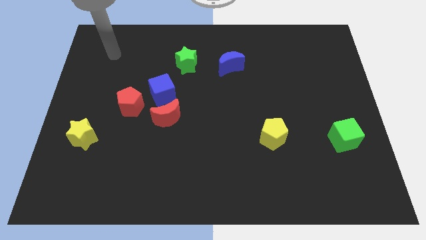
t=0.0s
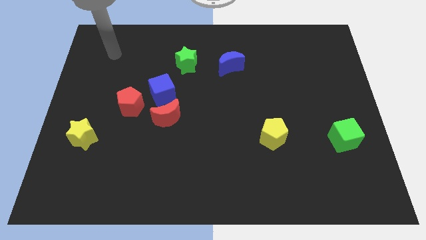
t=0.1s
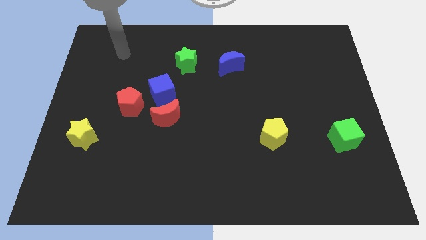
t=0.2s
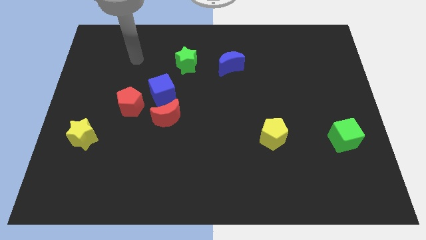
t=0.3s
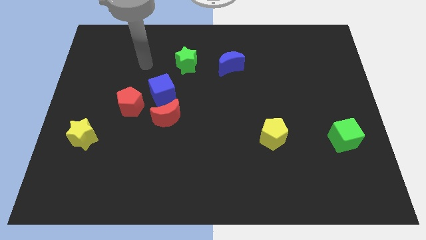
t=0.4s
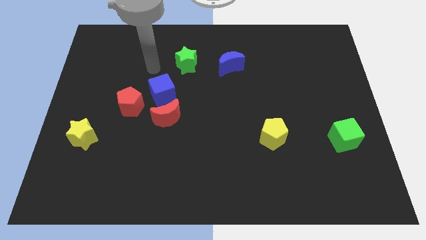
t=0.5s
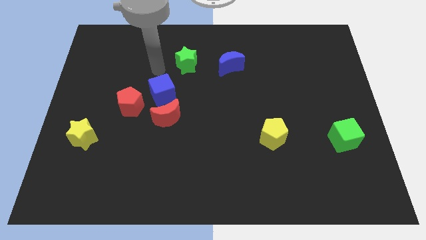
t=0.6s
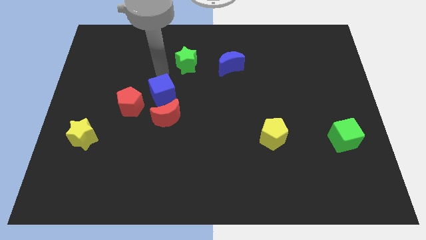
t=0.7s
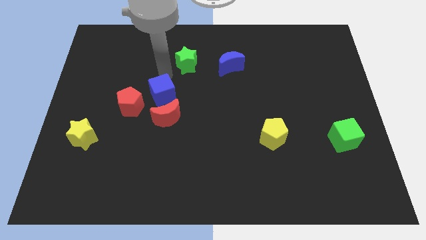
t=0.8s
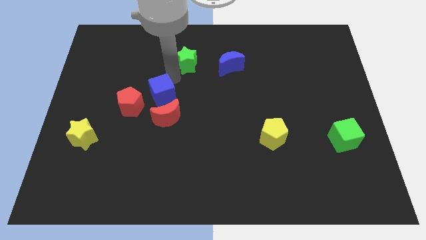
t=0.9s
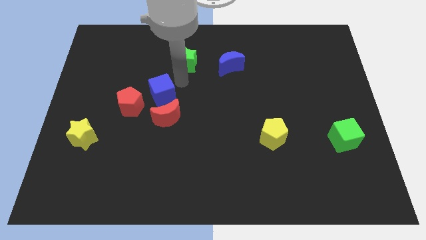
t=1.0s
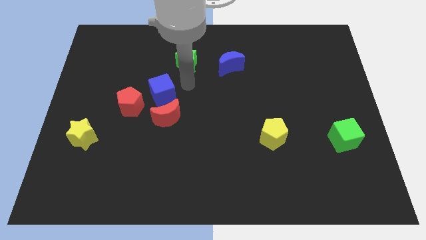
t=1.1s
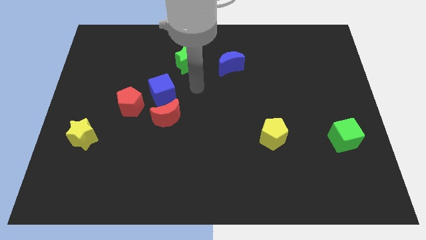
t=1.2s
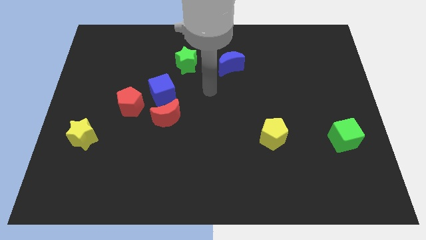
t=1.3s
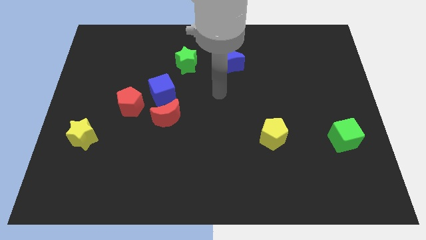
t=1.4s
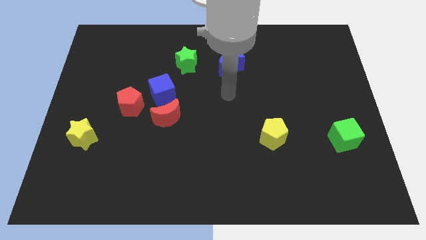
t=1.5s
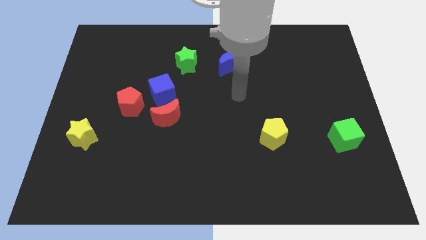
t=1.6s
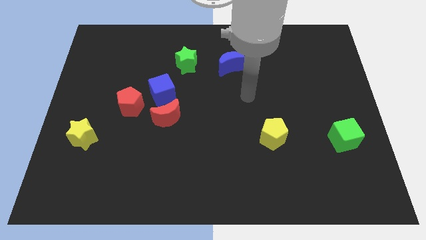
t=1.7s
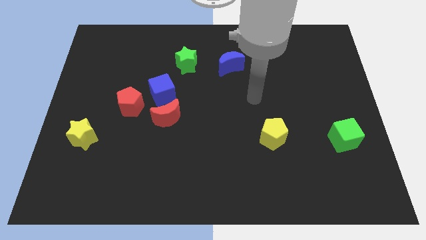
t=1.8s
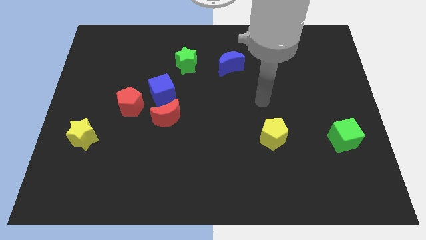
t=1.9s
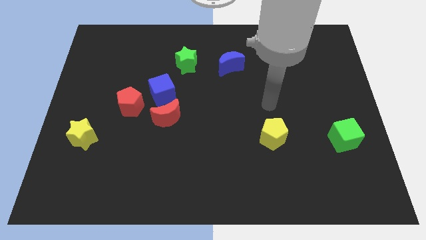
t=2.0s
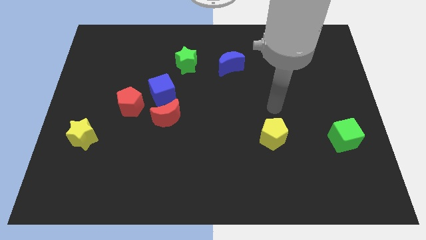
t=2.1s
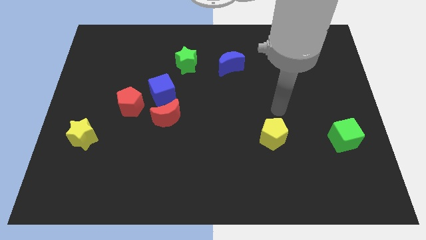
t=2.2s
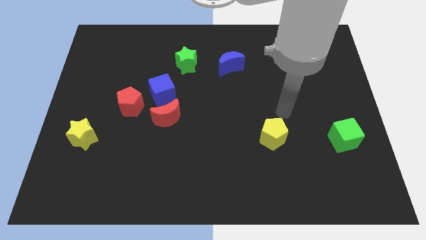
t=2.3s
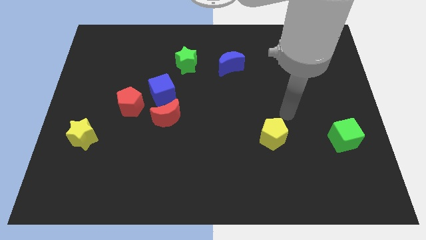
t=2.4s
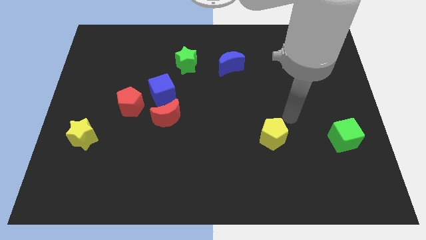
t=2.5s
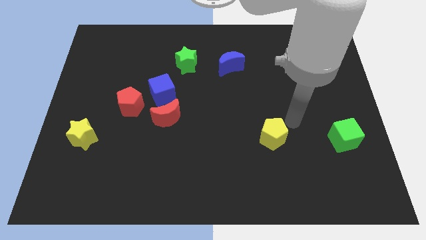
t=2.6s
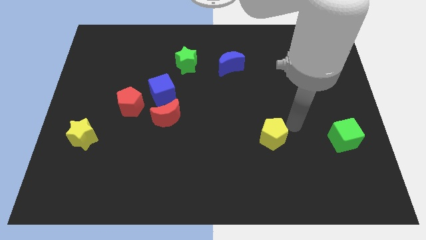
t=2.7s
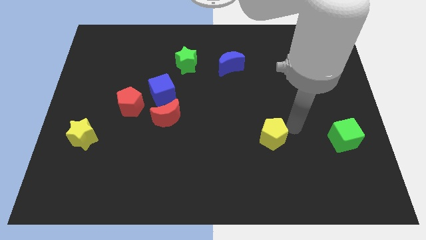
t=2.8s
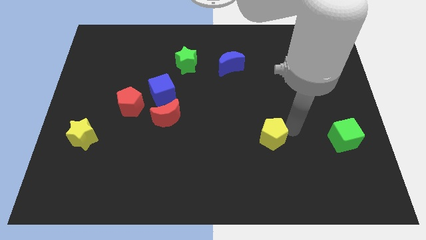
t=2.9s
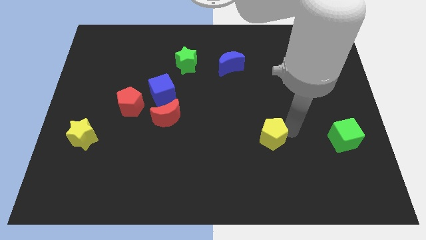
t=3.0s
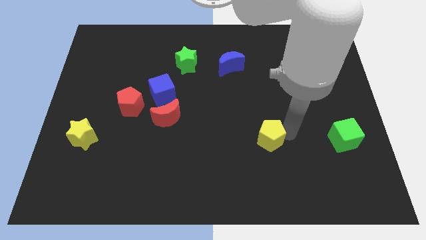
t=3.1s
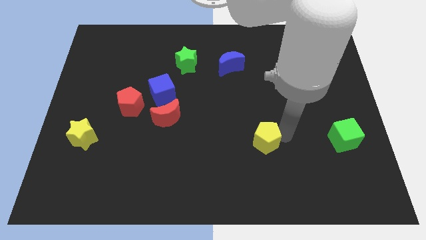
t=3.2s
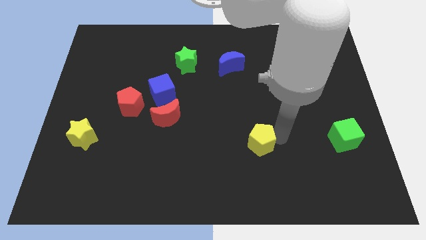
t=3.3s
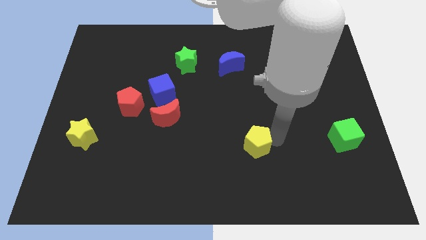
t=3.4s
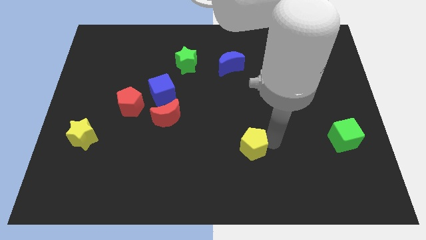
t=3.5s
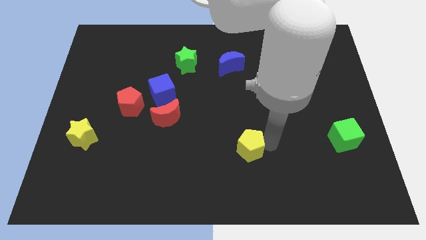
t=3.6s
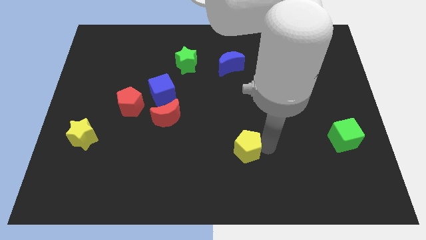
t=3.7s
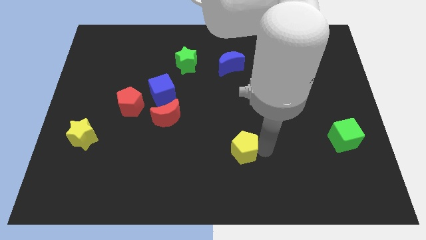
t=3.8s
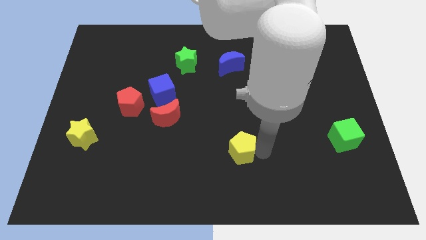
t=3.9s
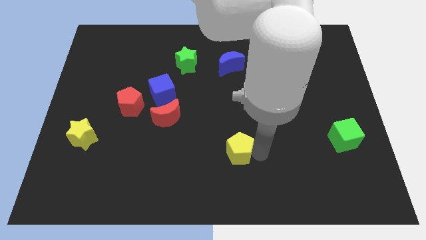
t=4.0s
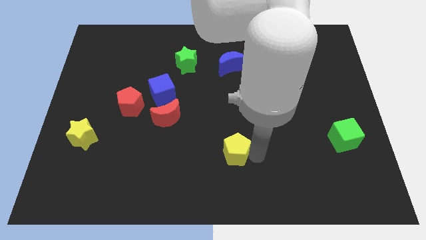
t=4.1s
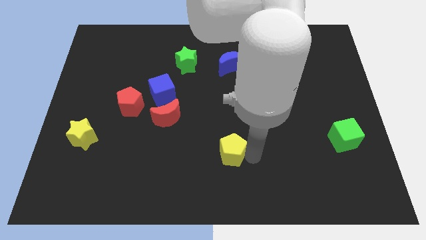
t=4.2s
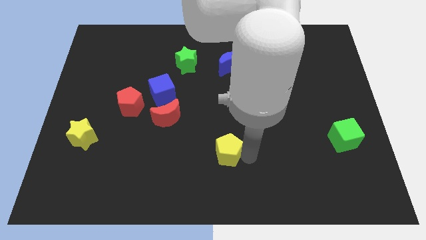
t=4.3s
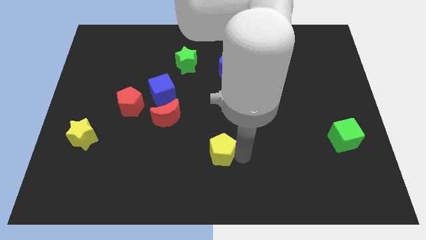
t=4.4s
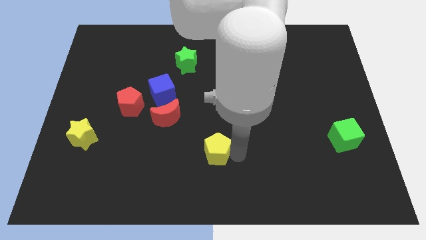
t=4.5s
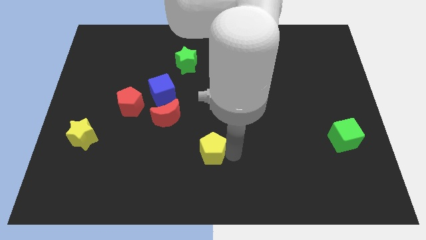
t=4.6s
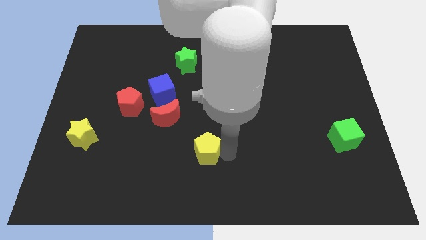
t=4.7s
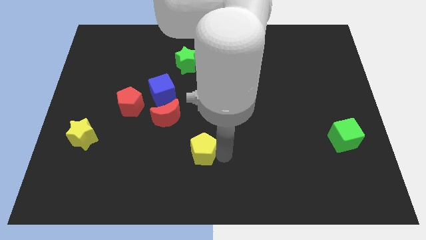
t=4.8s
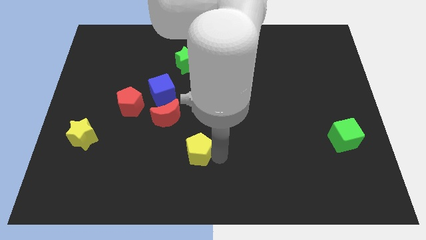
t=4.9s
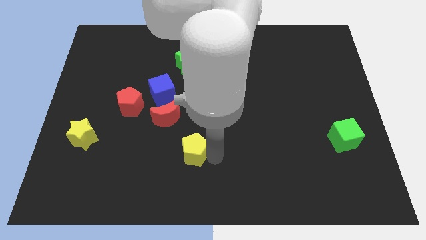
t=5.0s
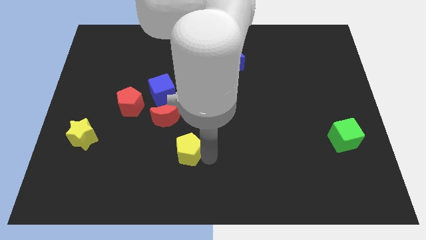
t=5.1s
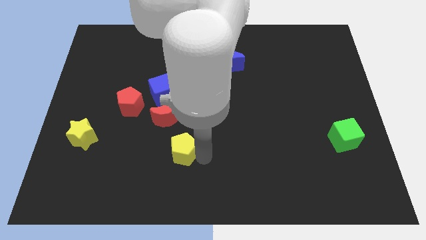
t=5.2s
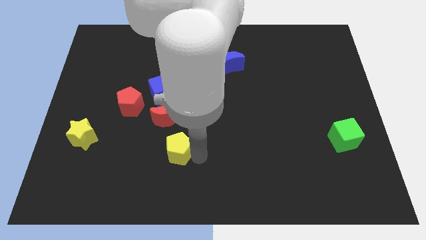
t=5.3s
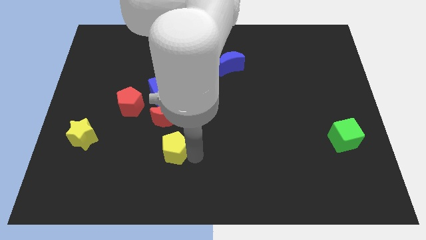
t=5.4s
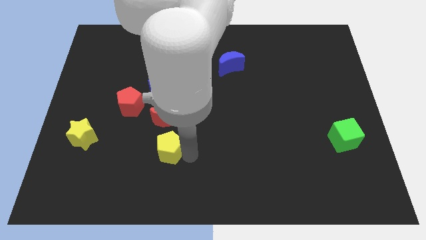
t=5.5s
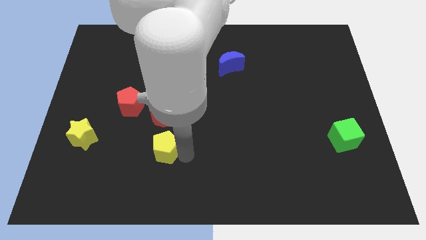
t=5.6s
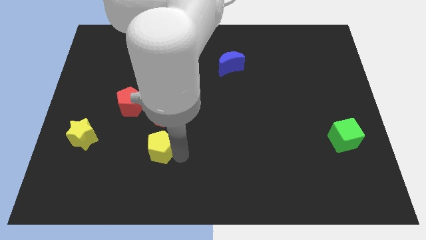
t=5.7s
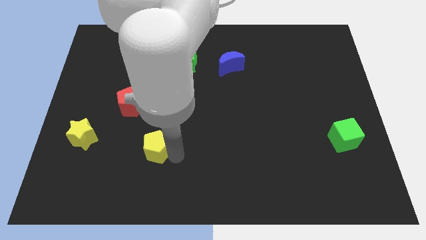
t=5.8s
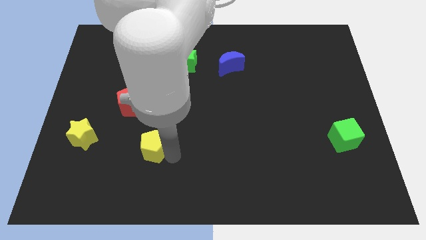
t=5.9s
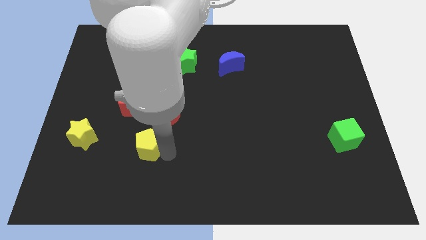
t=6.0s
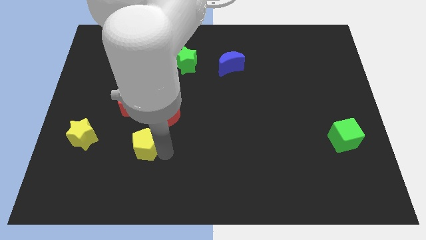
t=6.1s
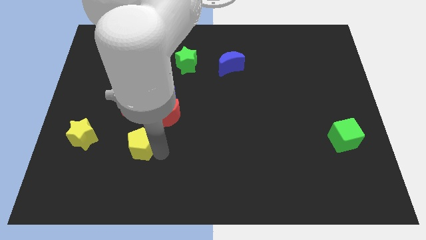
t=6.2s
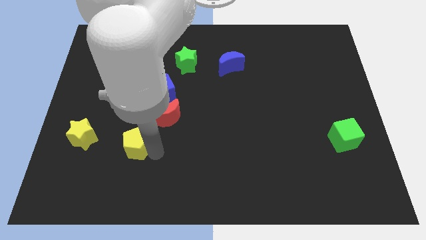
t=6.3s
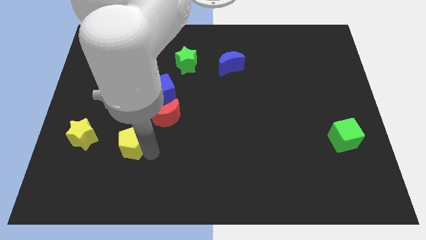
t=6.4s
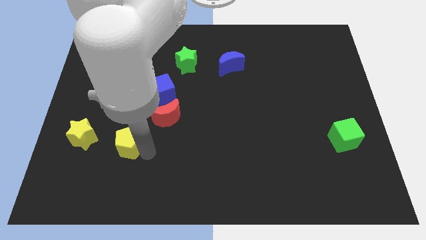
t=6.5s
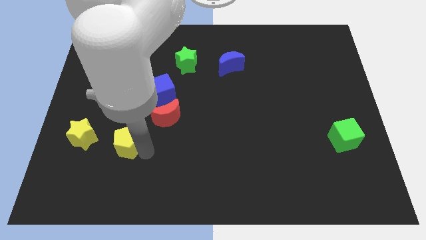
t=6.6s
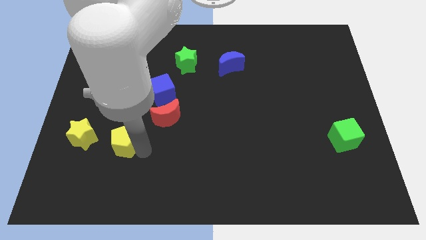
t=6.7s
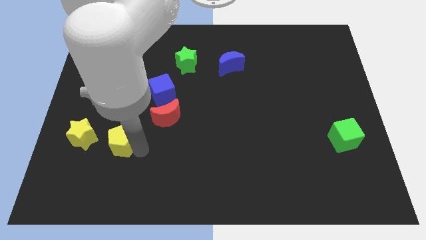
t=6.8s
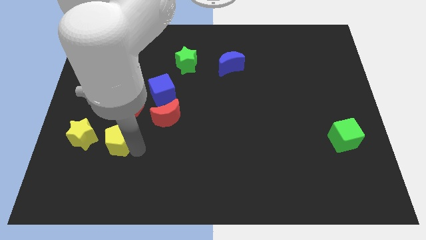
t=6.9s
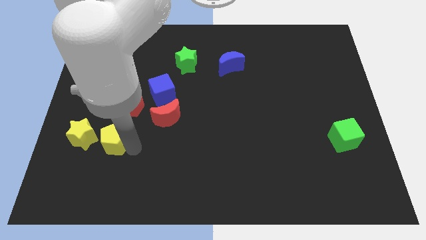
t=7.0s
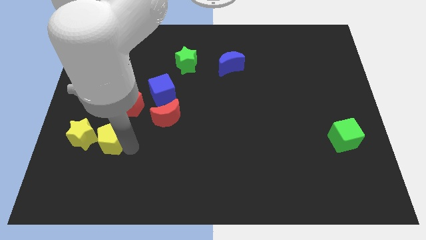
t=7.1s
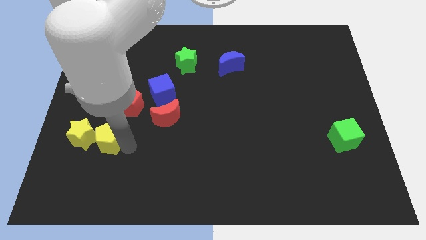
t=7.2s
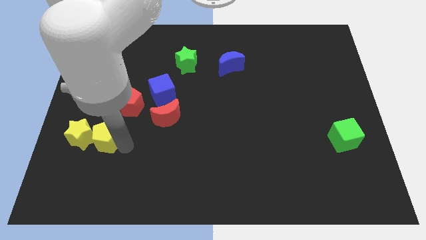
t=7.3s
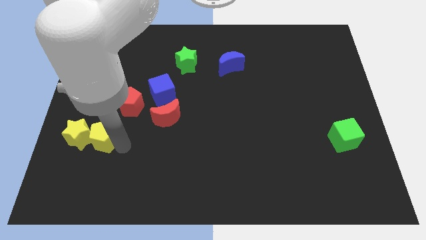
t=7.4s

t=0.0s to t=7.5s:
put the yellow pentagon next to the yellow star

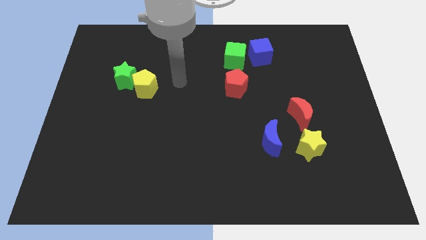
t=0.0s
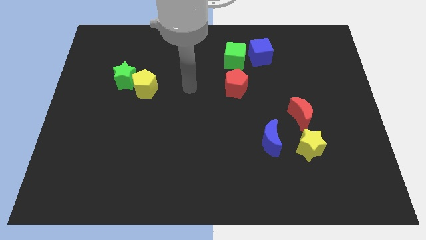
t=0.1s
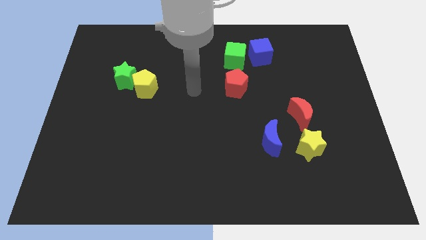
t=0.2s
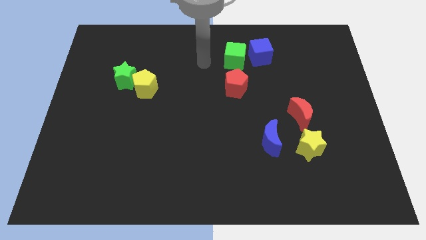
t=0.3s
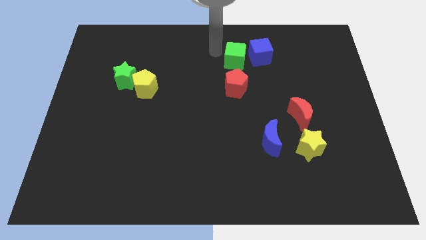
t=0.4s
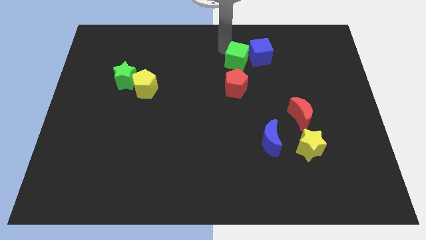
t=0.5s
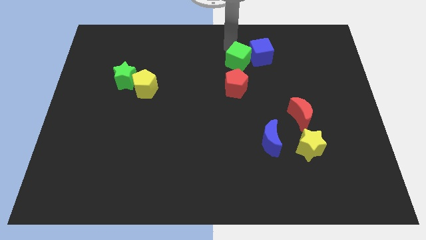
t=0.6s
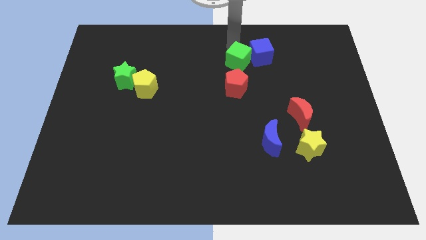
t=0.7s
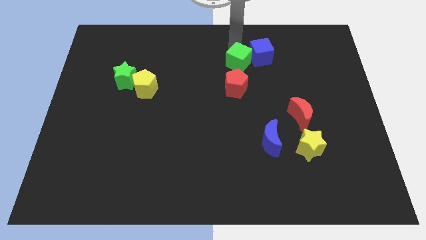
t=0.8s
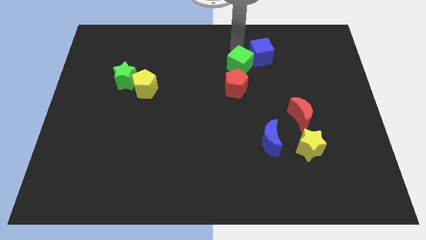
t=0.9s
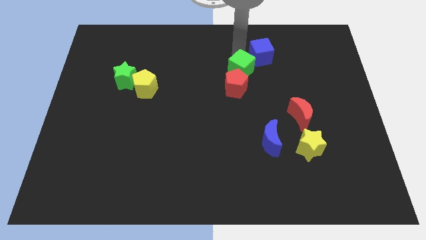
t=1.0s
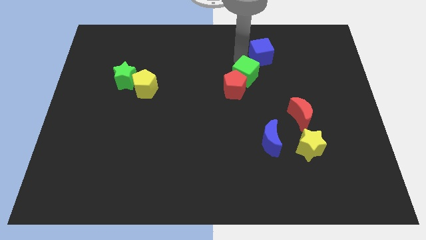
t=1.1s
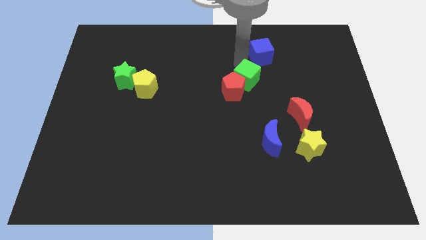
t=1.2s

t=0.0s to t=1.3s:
put the green cube next to the red pentagon
